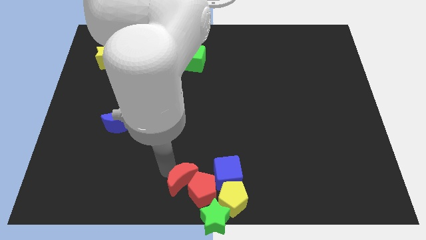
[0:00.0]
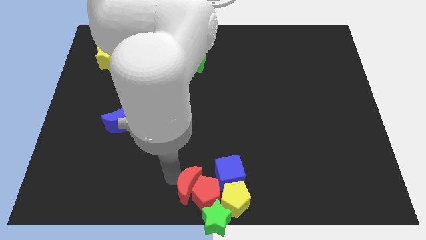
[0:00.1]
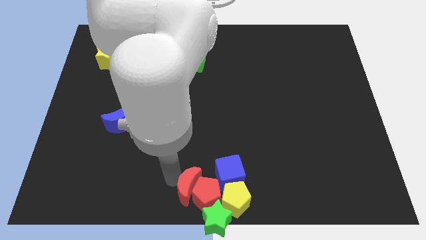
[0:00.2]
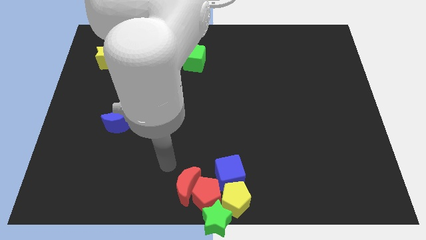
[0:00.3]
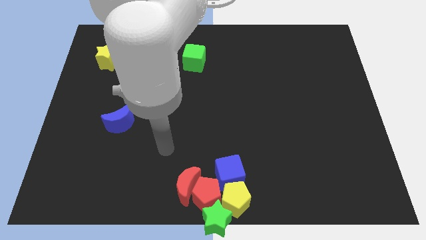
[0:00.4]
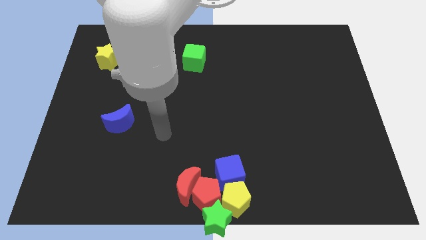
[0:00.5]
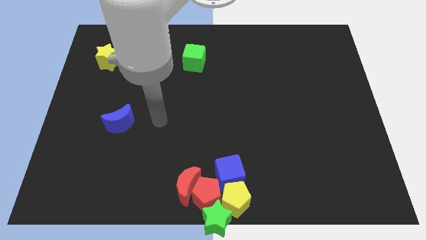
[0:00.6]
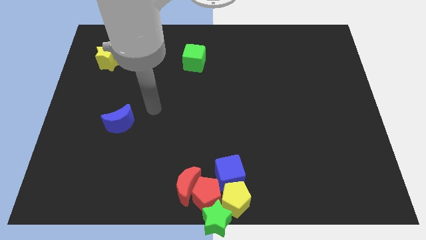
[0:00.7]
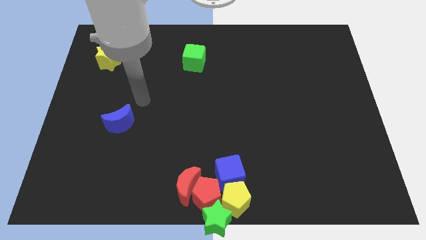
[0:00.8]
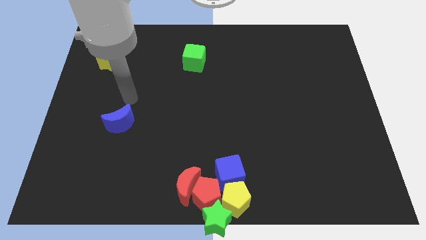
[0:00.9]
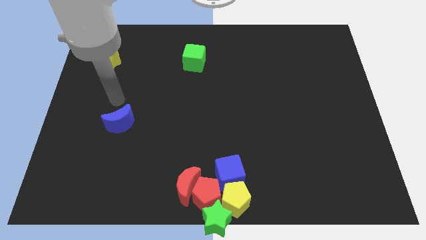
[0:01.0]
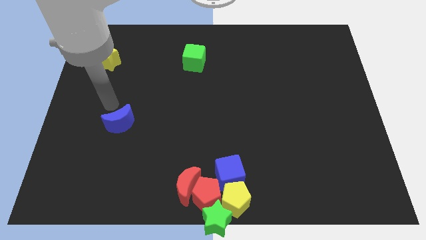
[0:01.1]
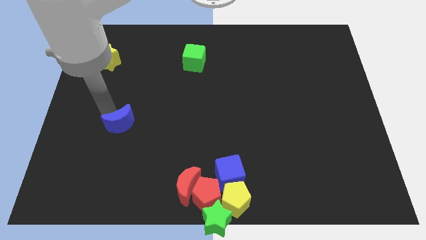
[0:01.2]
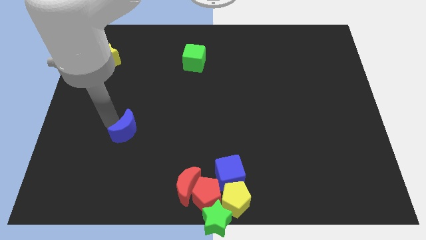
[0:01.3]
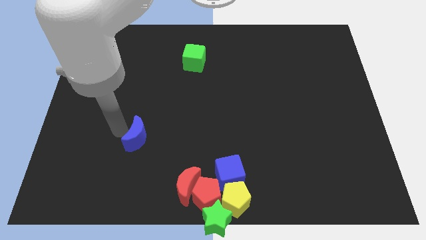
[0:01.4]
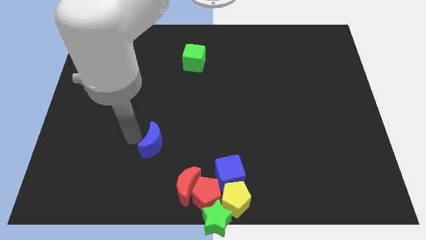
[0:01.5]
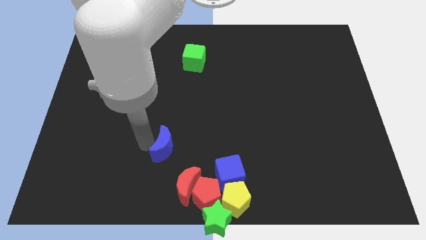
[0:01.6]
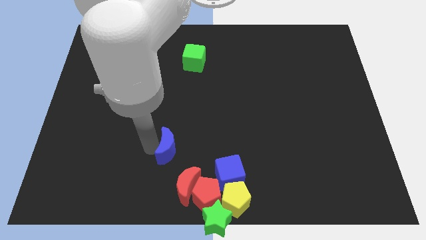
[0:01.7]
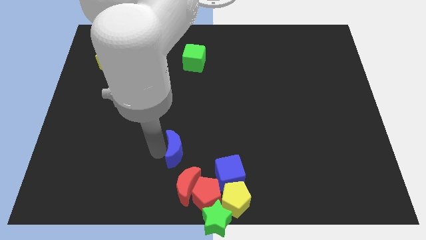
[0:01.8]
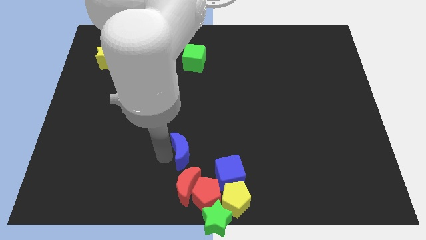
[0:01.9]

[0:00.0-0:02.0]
place the blue moon close to the red moon

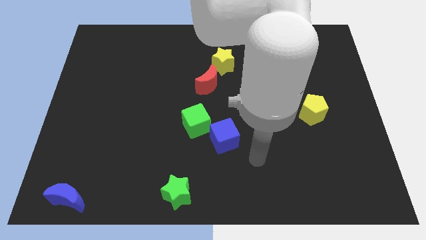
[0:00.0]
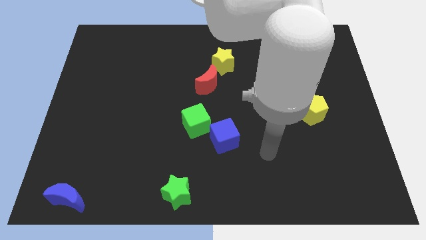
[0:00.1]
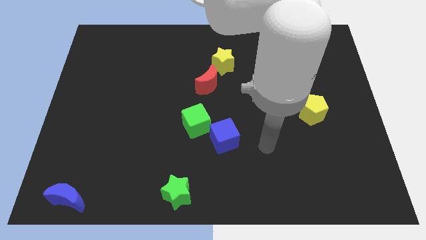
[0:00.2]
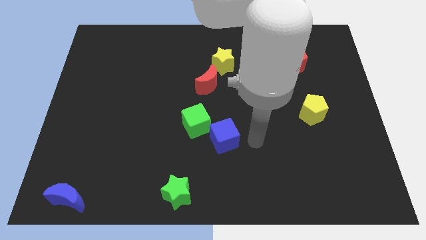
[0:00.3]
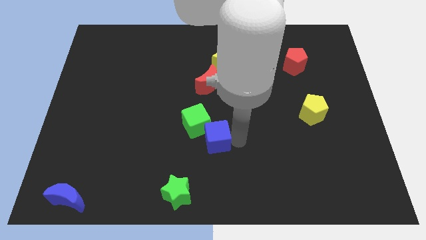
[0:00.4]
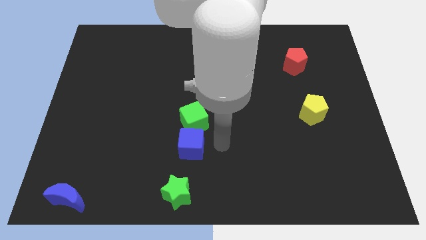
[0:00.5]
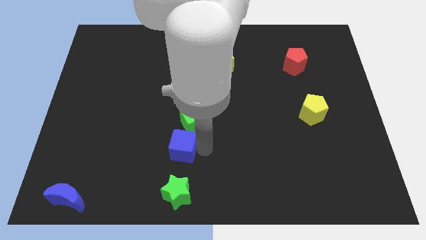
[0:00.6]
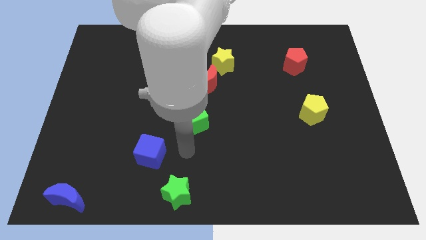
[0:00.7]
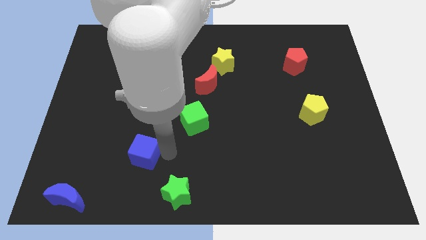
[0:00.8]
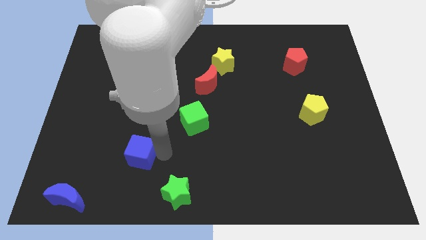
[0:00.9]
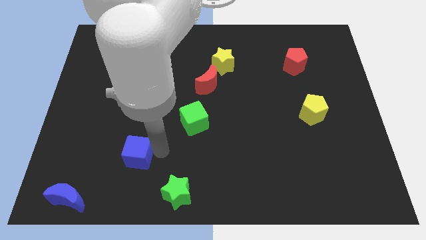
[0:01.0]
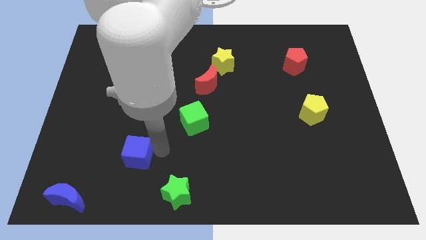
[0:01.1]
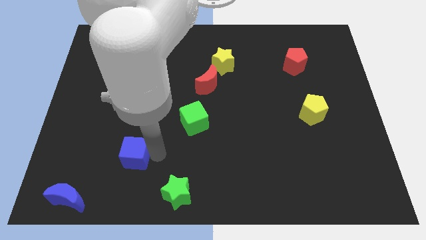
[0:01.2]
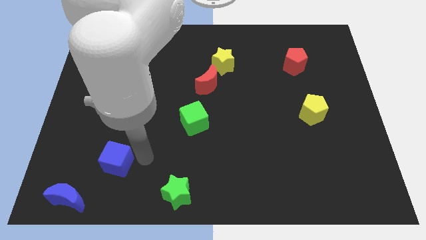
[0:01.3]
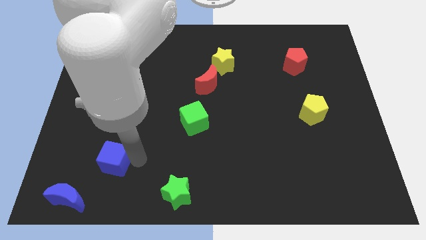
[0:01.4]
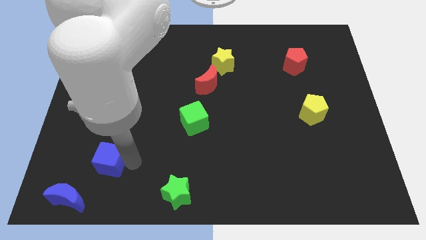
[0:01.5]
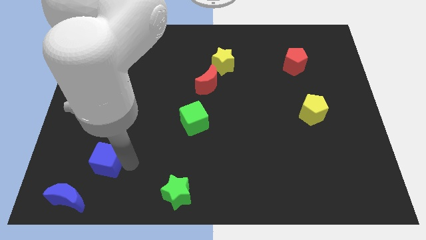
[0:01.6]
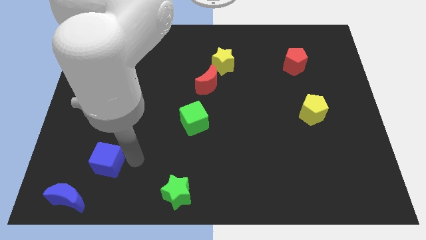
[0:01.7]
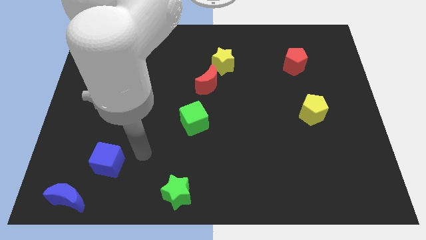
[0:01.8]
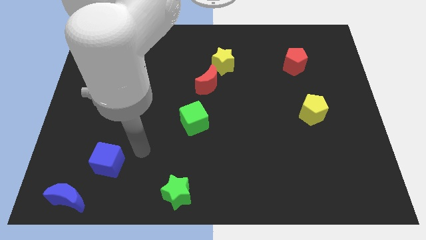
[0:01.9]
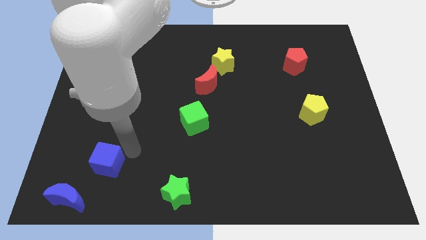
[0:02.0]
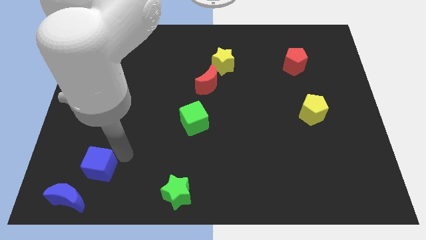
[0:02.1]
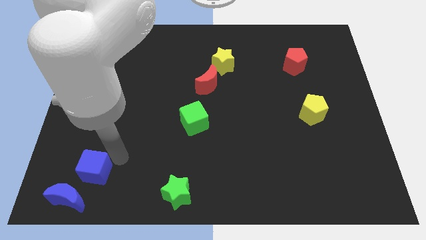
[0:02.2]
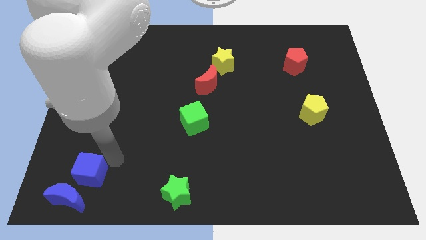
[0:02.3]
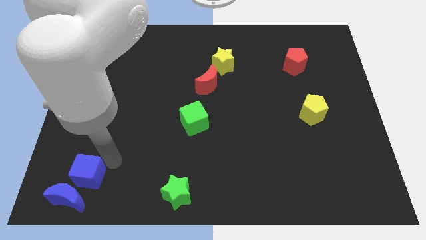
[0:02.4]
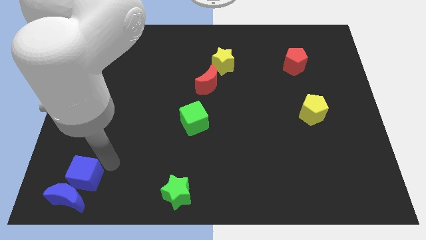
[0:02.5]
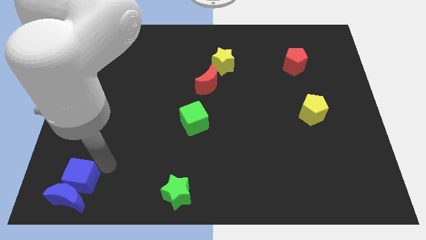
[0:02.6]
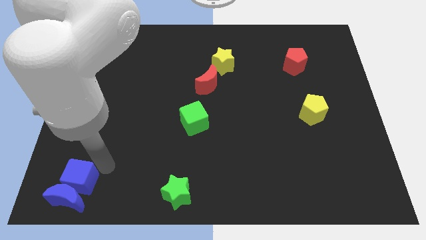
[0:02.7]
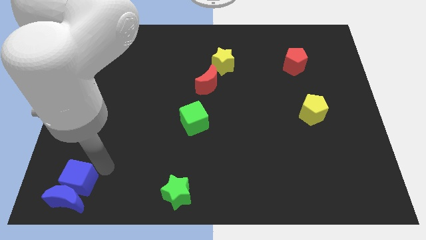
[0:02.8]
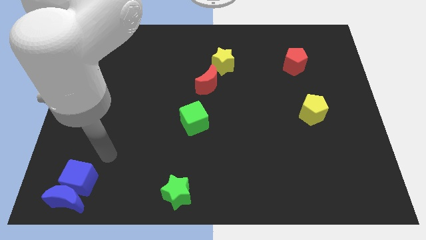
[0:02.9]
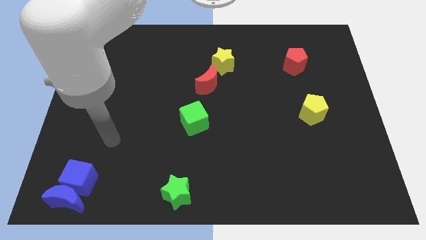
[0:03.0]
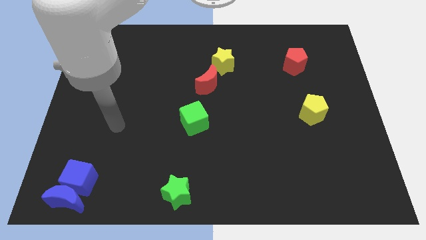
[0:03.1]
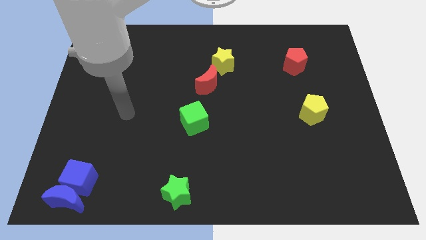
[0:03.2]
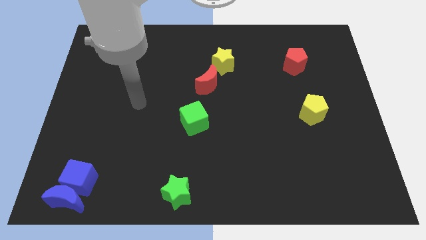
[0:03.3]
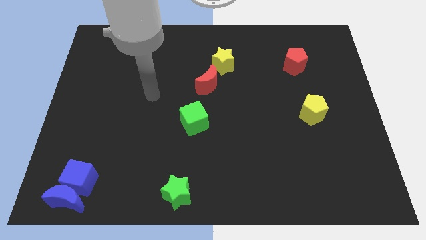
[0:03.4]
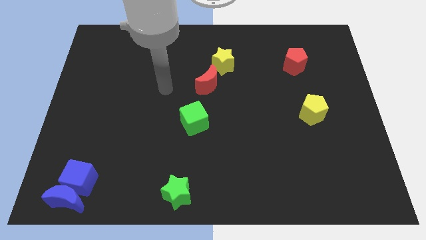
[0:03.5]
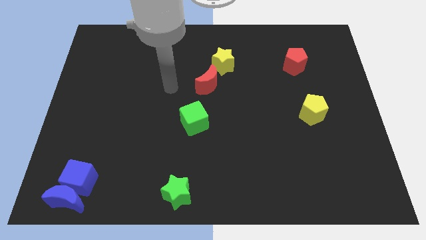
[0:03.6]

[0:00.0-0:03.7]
place the blue cube above the blue moon

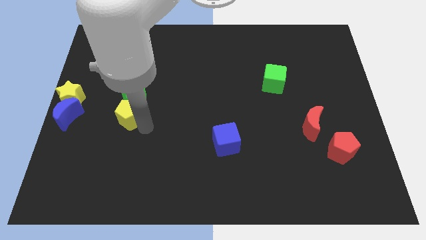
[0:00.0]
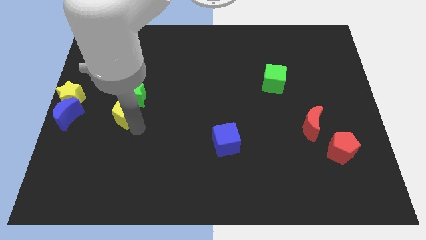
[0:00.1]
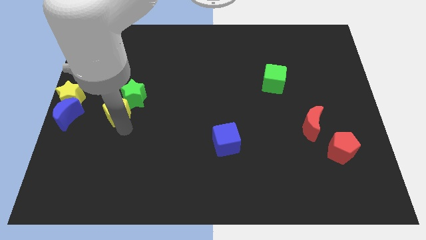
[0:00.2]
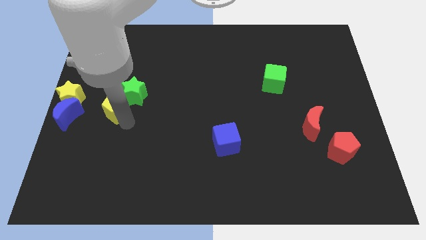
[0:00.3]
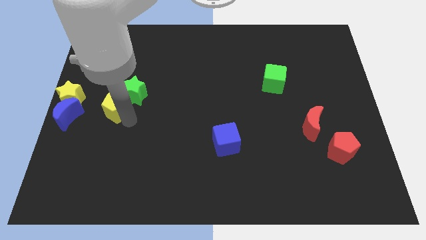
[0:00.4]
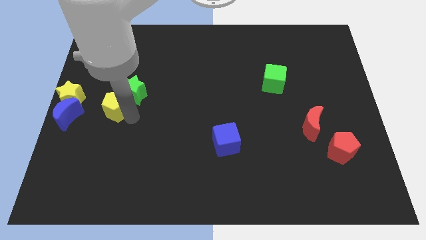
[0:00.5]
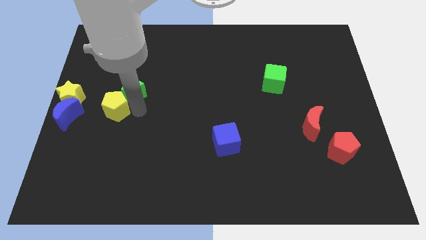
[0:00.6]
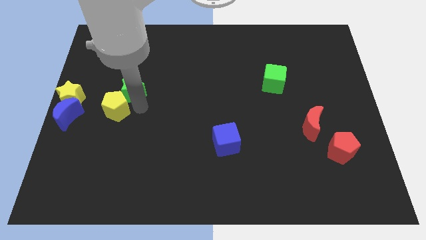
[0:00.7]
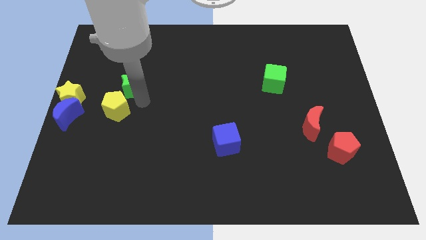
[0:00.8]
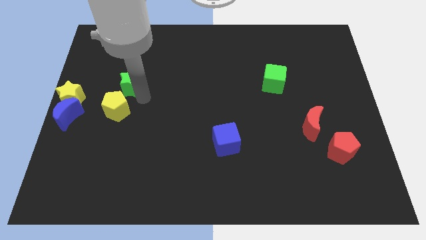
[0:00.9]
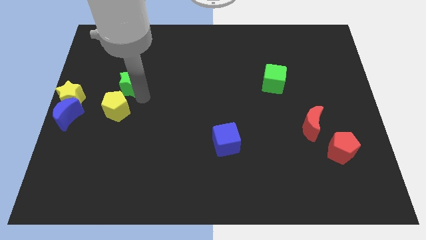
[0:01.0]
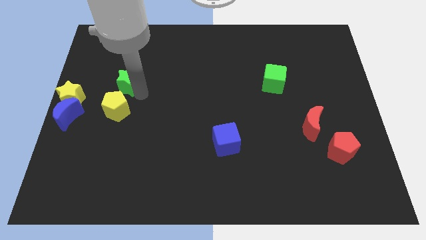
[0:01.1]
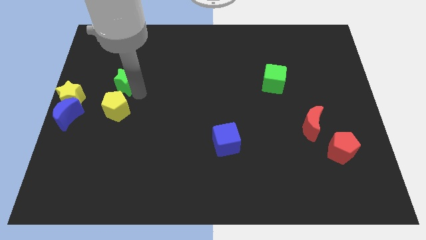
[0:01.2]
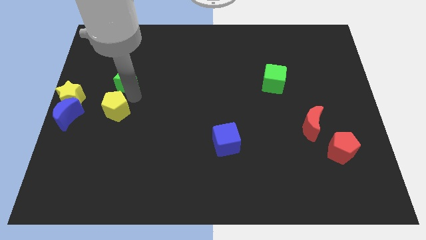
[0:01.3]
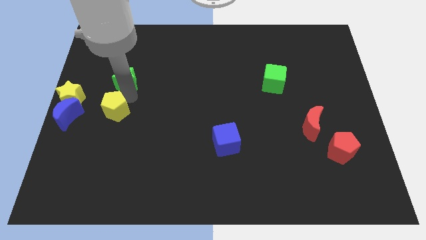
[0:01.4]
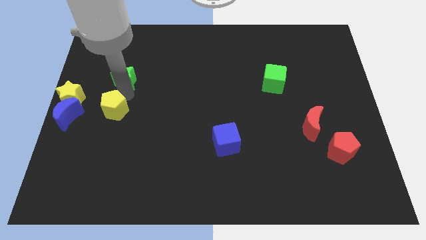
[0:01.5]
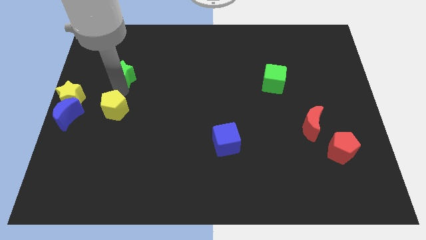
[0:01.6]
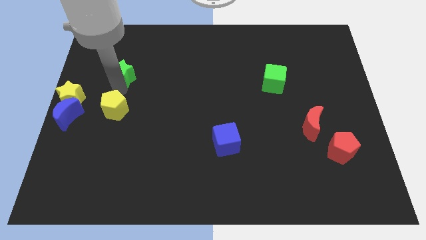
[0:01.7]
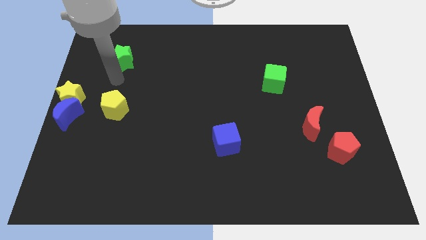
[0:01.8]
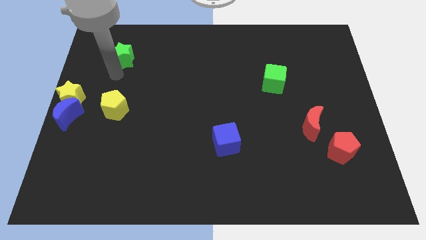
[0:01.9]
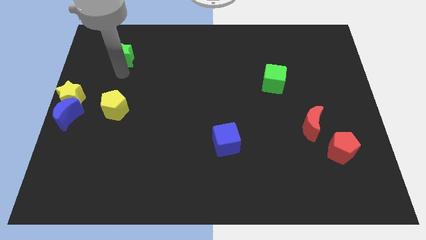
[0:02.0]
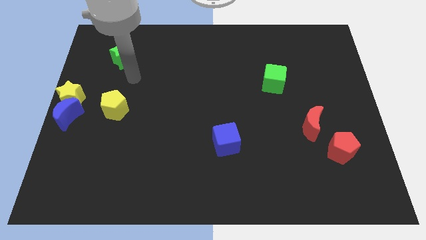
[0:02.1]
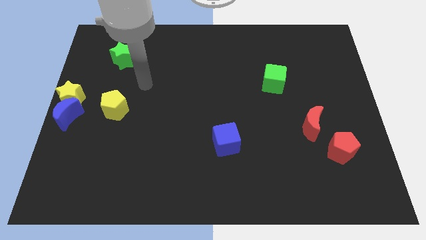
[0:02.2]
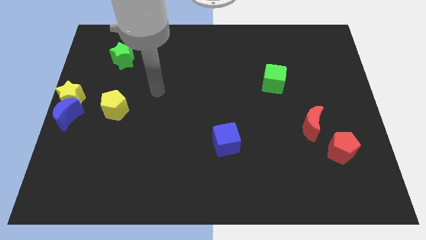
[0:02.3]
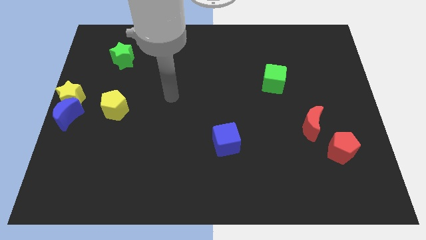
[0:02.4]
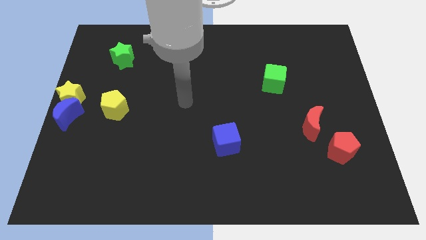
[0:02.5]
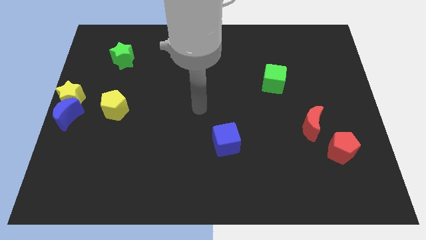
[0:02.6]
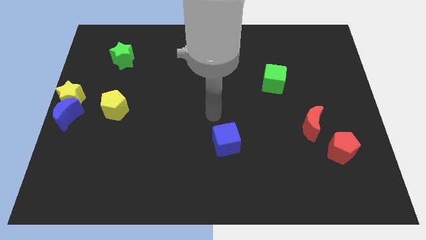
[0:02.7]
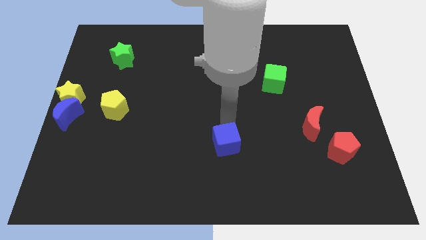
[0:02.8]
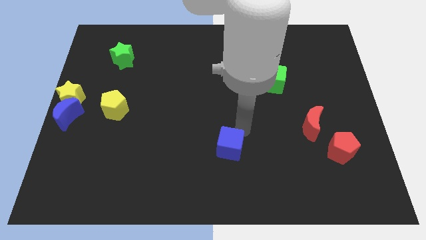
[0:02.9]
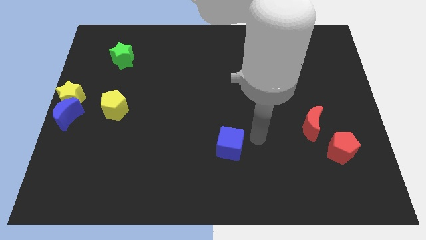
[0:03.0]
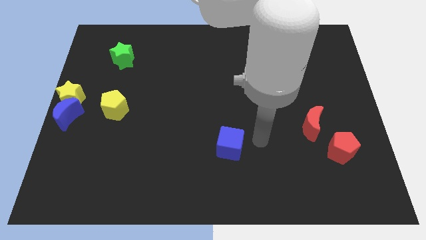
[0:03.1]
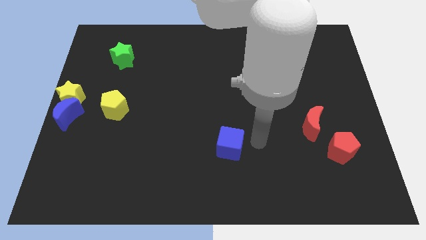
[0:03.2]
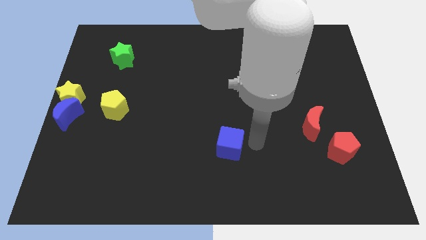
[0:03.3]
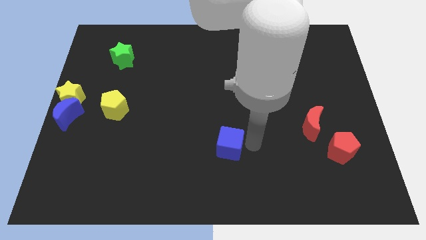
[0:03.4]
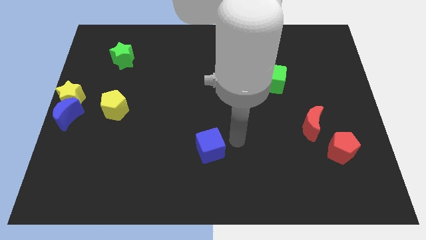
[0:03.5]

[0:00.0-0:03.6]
push the green star towards upward
